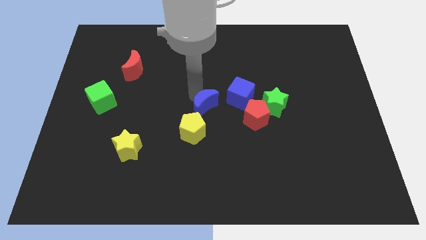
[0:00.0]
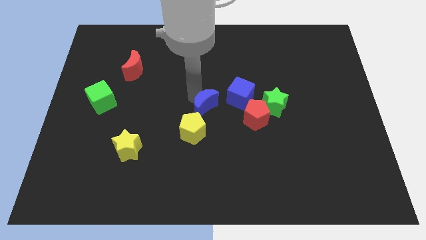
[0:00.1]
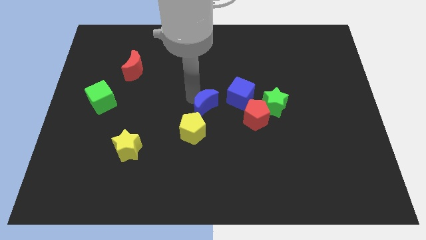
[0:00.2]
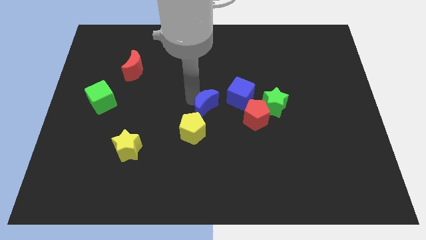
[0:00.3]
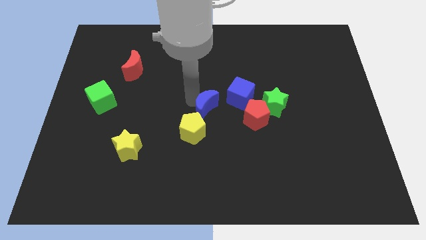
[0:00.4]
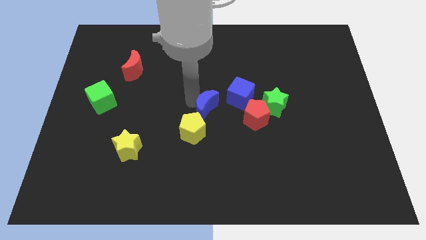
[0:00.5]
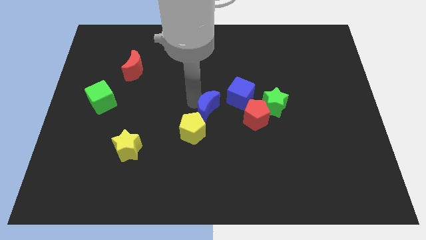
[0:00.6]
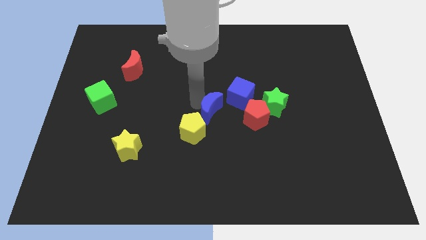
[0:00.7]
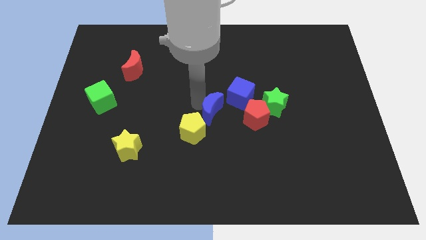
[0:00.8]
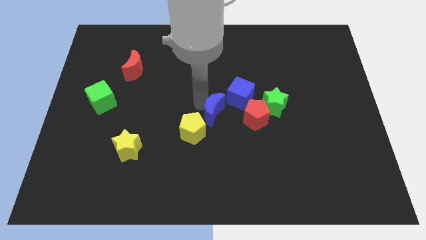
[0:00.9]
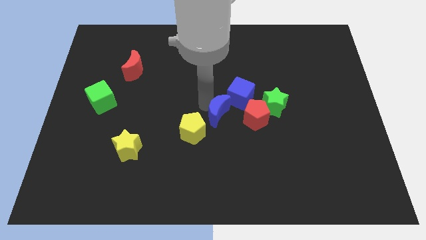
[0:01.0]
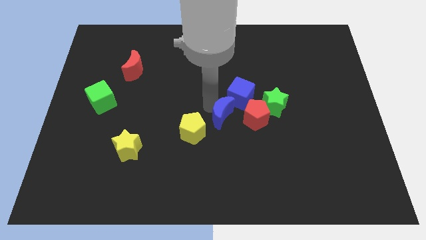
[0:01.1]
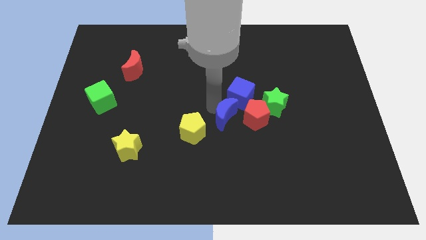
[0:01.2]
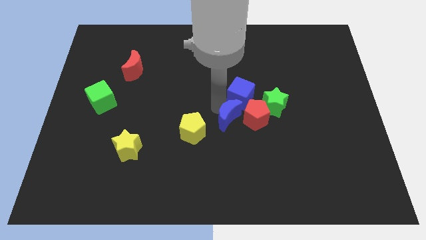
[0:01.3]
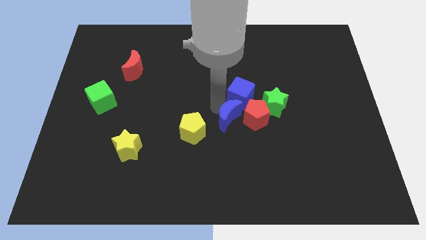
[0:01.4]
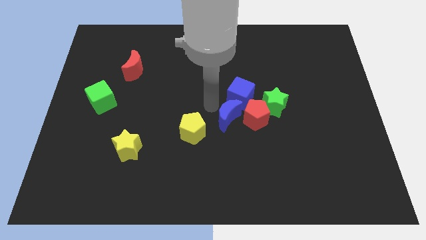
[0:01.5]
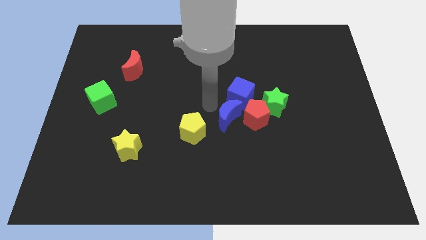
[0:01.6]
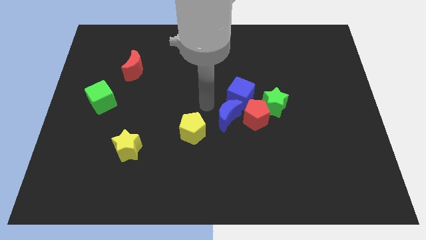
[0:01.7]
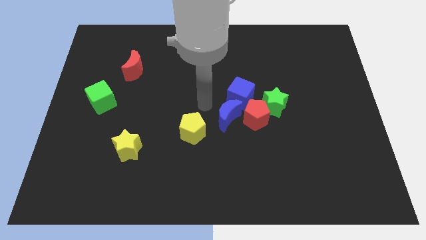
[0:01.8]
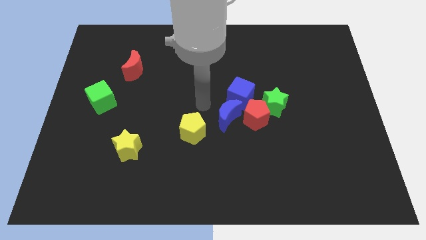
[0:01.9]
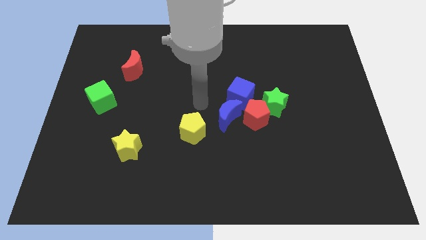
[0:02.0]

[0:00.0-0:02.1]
slide blue moon to the left of red pentagon

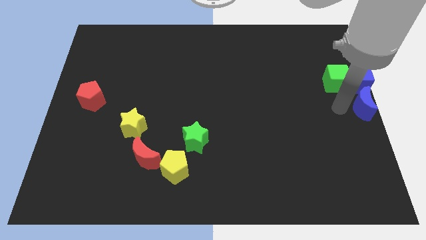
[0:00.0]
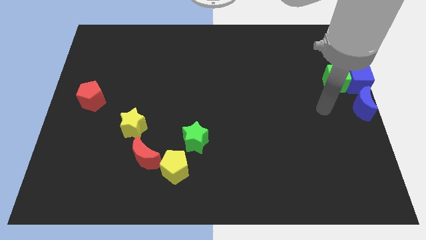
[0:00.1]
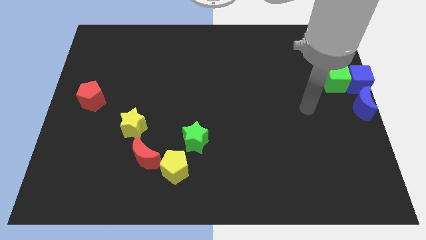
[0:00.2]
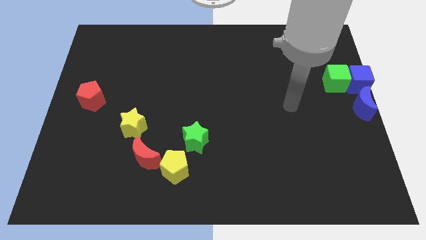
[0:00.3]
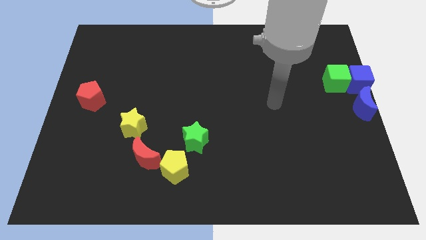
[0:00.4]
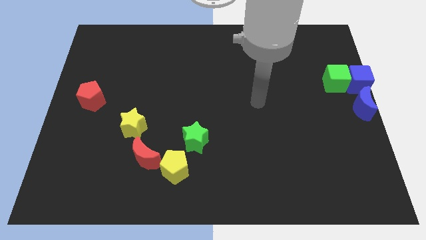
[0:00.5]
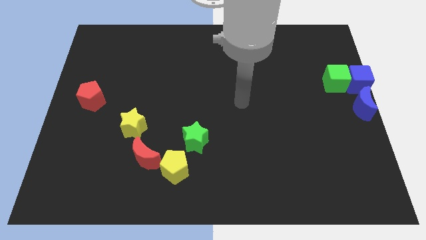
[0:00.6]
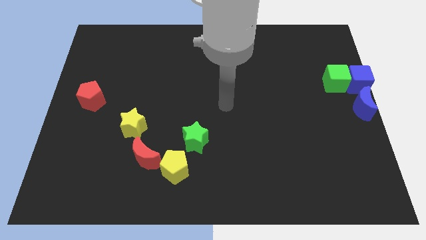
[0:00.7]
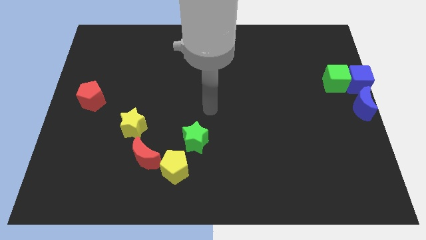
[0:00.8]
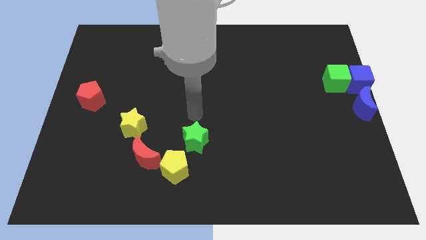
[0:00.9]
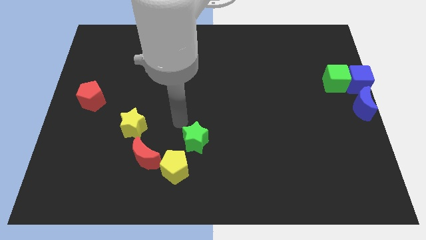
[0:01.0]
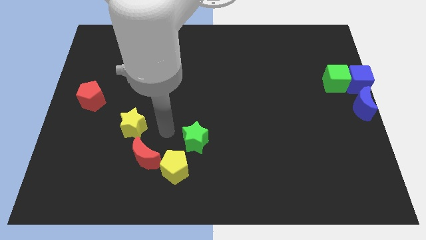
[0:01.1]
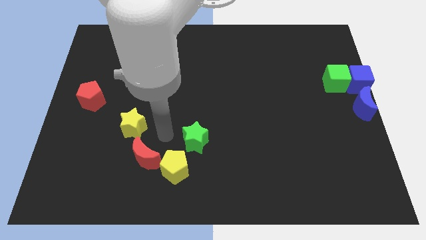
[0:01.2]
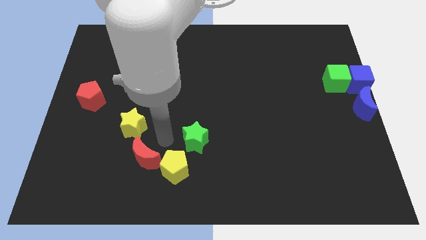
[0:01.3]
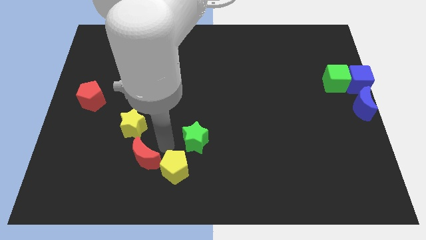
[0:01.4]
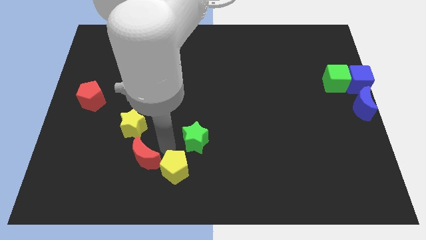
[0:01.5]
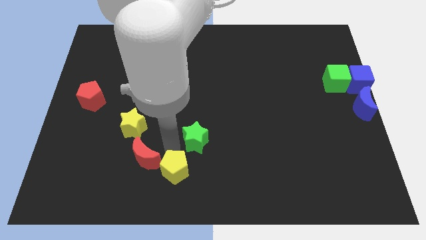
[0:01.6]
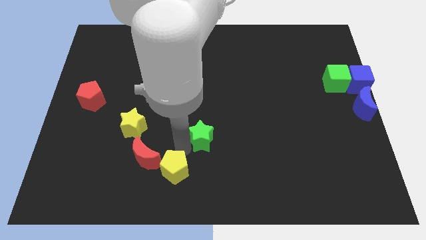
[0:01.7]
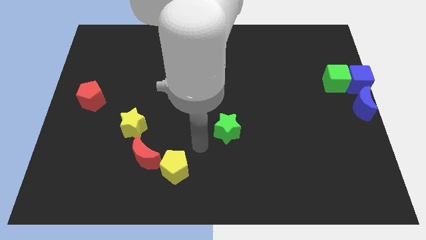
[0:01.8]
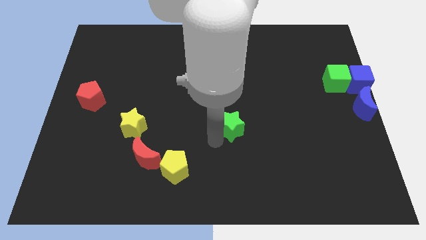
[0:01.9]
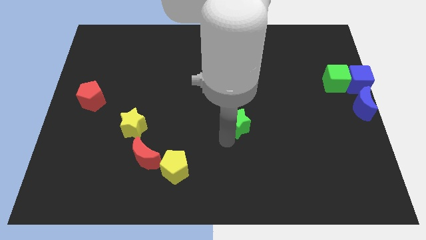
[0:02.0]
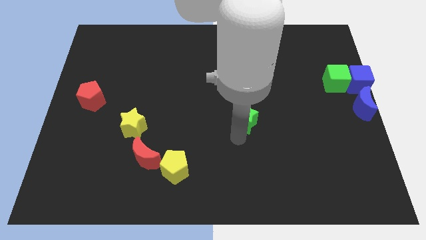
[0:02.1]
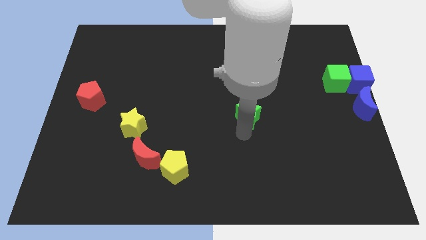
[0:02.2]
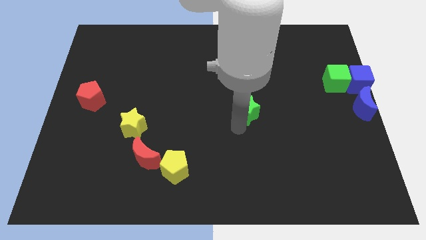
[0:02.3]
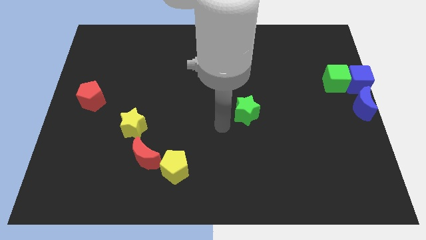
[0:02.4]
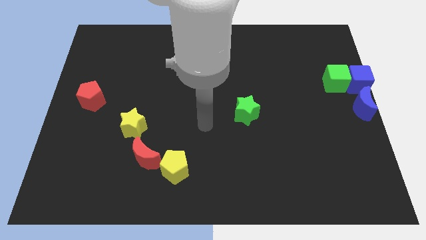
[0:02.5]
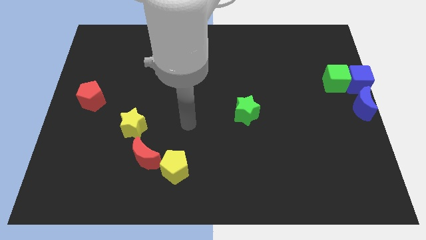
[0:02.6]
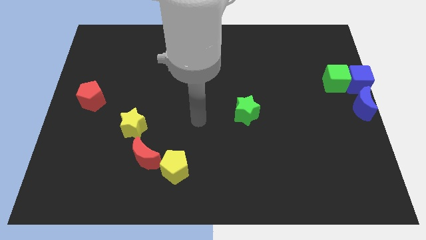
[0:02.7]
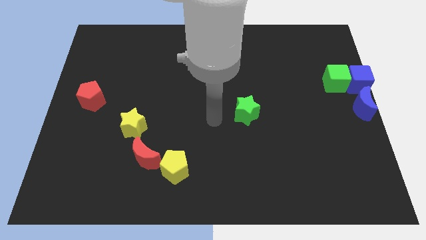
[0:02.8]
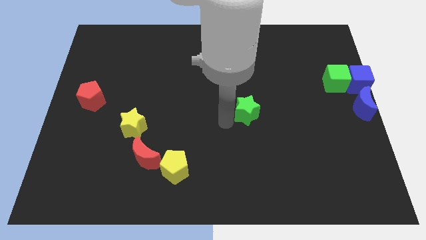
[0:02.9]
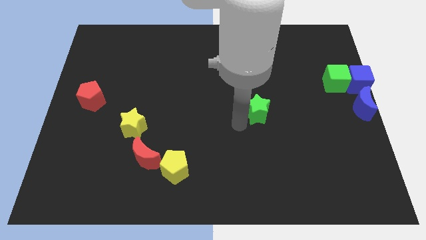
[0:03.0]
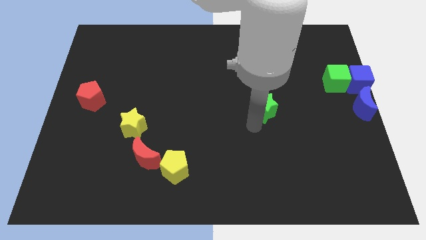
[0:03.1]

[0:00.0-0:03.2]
push green star away from the yellow pentagon

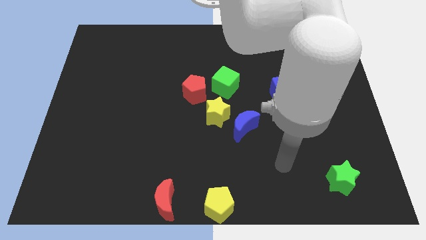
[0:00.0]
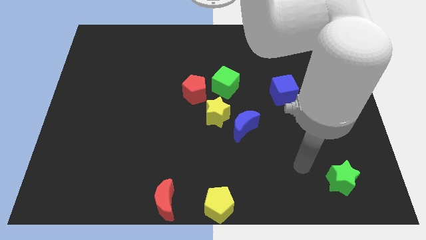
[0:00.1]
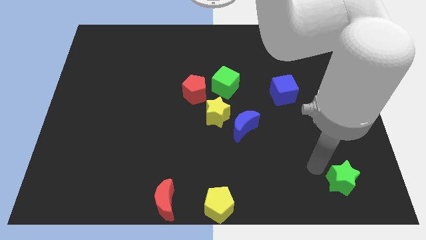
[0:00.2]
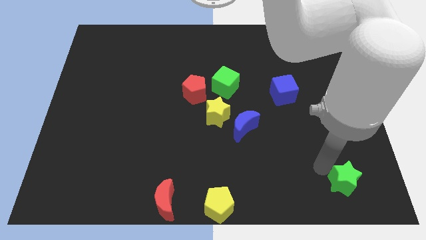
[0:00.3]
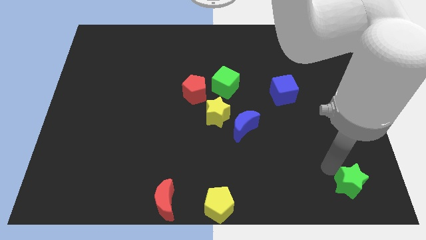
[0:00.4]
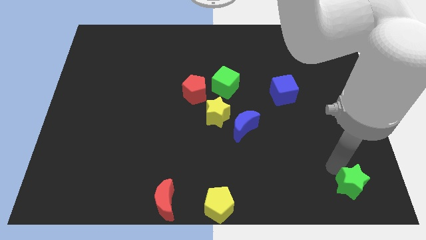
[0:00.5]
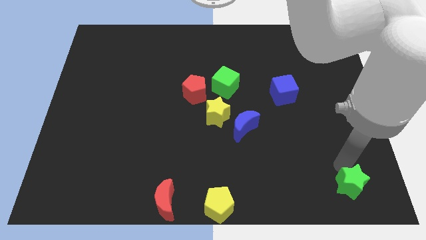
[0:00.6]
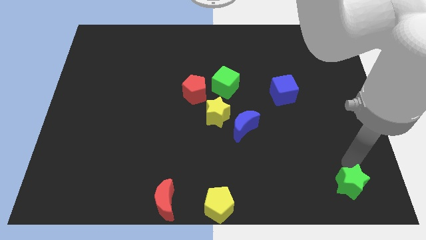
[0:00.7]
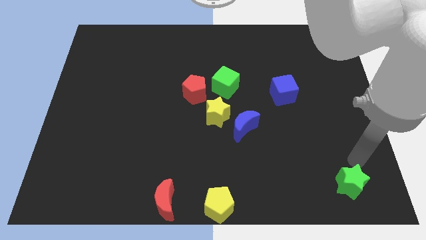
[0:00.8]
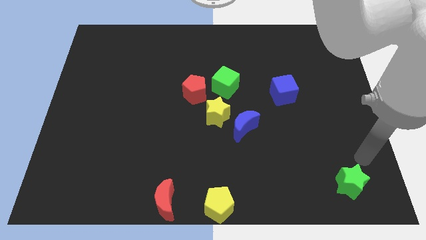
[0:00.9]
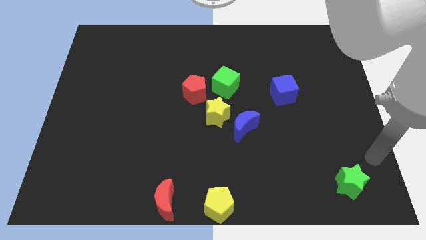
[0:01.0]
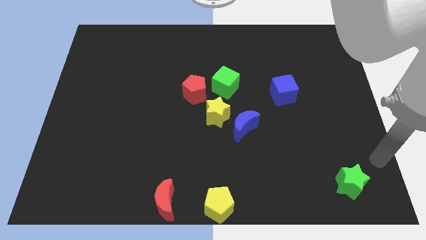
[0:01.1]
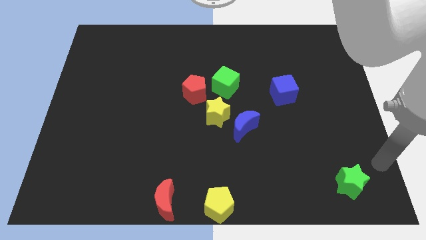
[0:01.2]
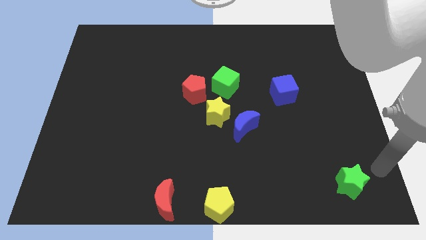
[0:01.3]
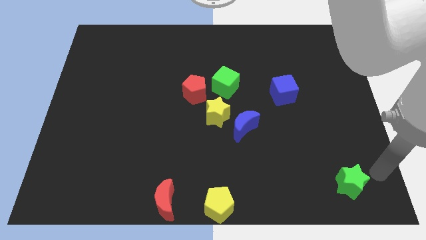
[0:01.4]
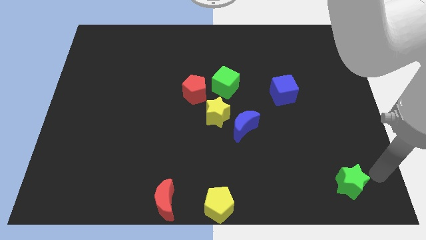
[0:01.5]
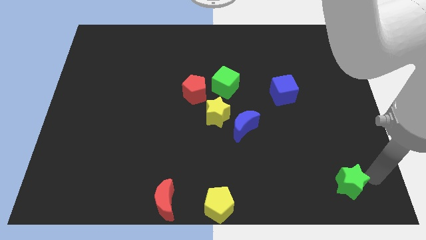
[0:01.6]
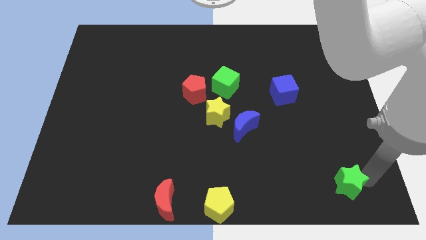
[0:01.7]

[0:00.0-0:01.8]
touch the green star on its right

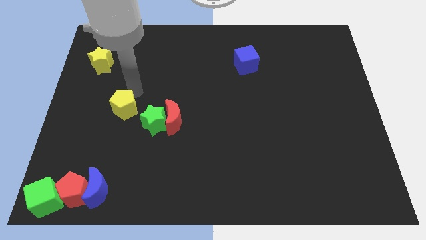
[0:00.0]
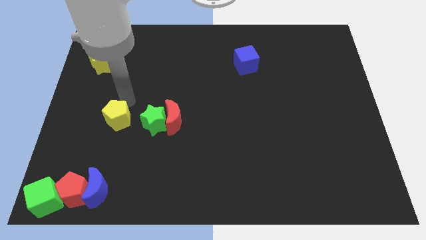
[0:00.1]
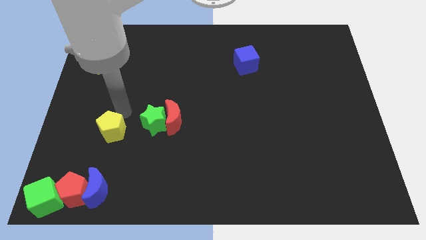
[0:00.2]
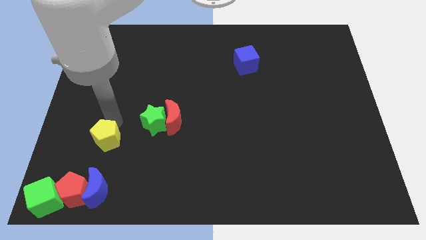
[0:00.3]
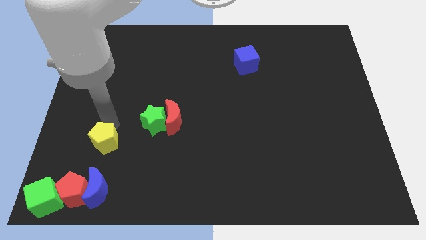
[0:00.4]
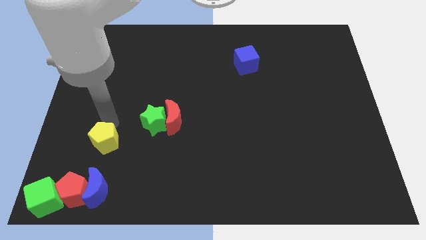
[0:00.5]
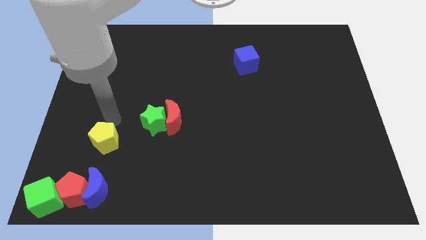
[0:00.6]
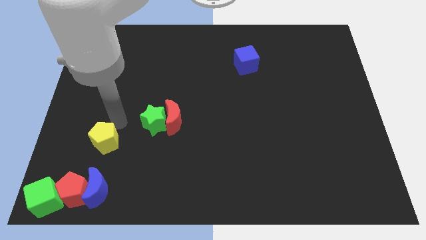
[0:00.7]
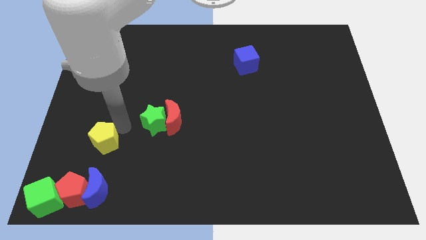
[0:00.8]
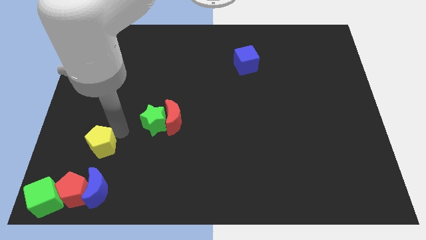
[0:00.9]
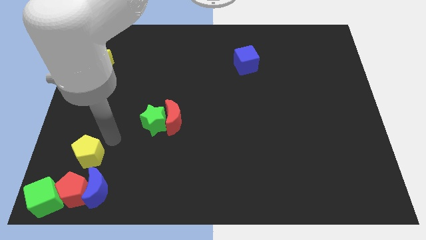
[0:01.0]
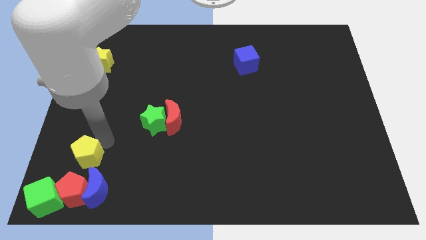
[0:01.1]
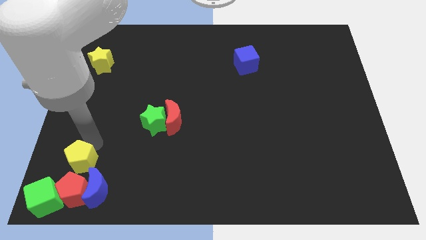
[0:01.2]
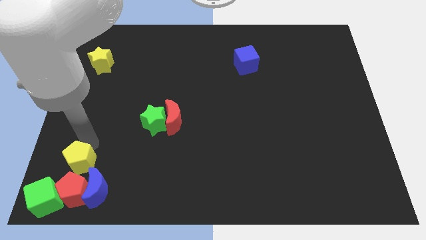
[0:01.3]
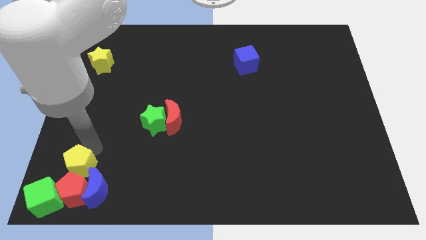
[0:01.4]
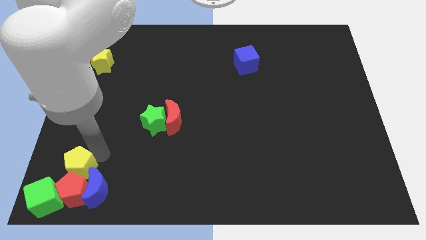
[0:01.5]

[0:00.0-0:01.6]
push yellow pentagon above red pentagon

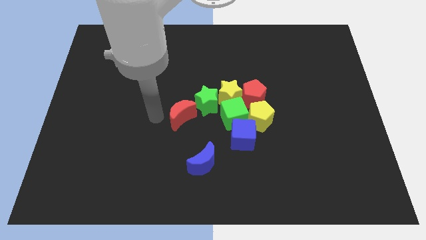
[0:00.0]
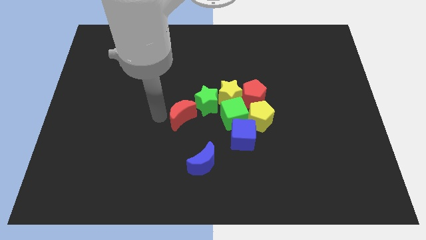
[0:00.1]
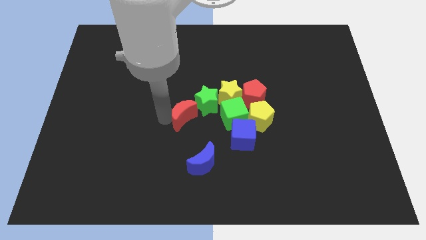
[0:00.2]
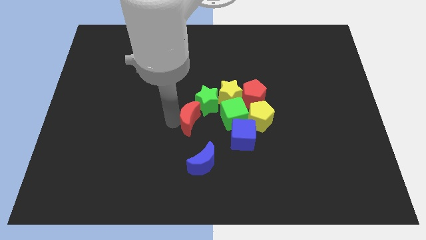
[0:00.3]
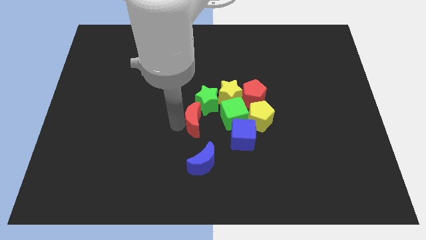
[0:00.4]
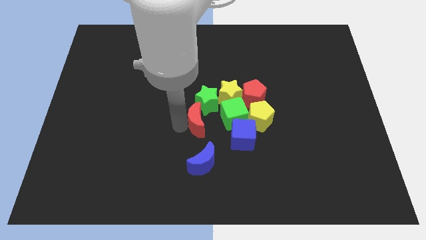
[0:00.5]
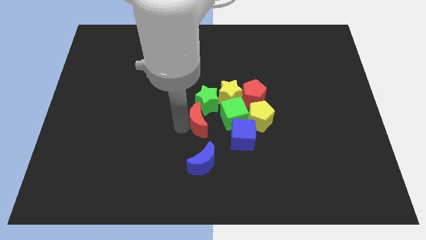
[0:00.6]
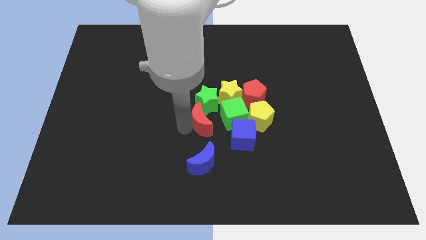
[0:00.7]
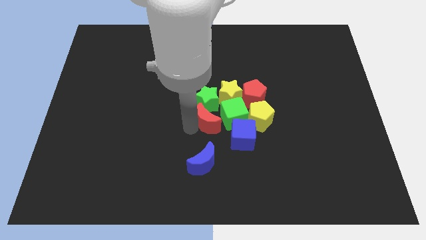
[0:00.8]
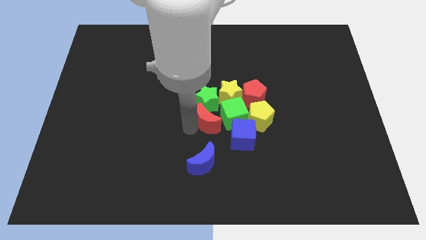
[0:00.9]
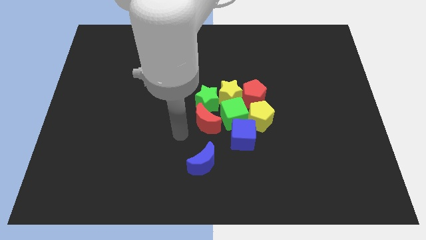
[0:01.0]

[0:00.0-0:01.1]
move the red crescent towards the left of green cube
